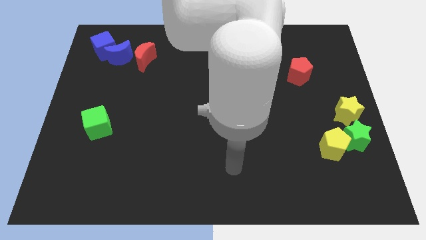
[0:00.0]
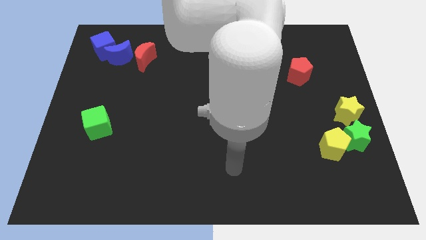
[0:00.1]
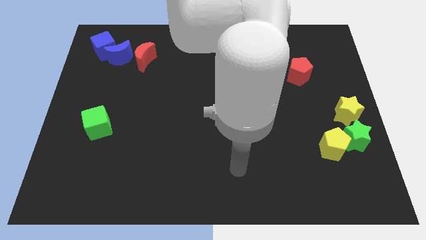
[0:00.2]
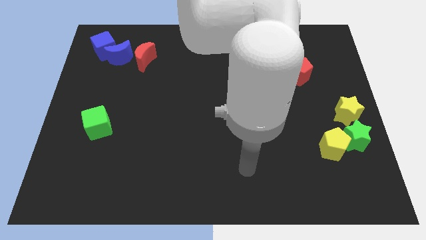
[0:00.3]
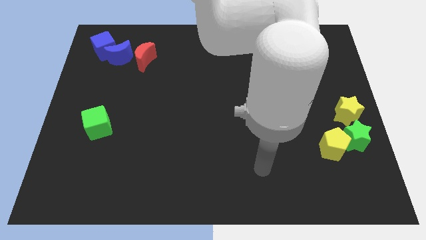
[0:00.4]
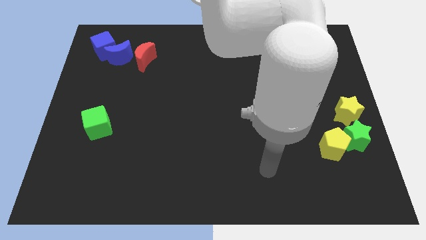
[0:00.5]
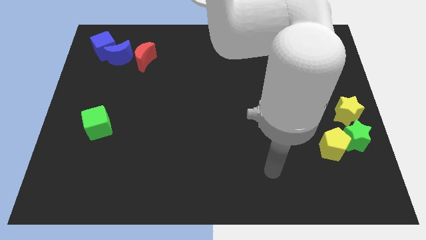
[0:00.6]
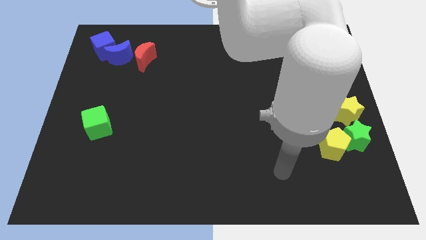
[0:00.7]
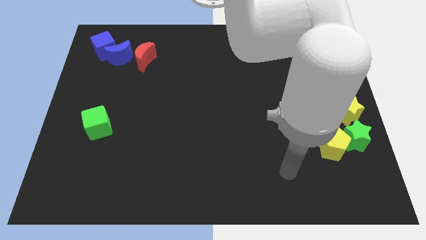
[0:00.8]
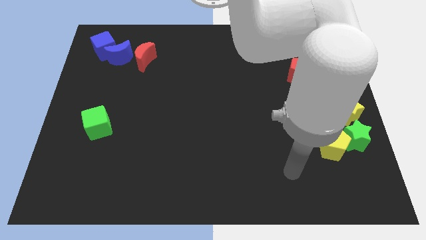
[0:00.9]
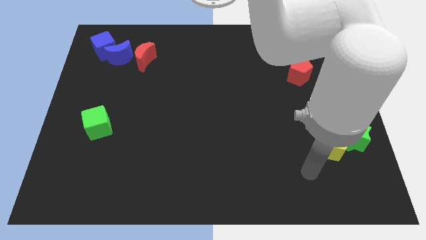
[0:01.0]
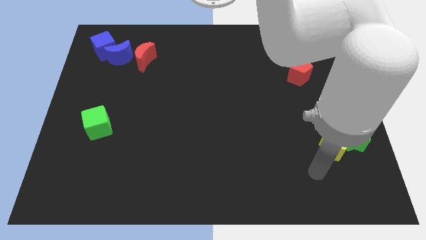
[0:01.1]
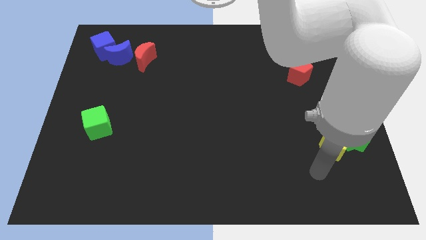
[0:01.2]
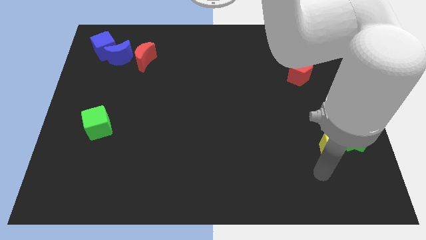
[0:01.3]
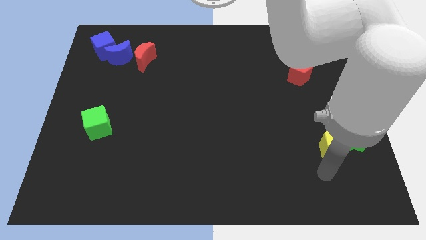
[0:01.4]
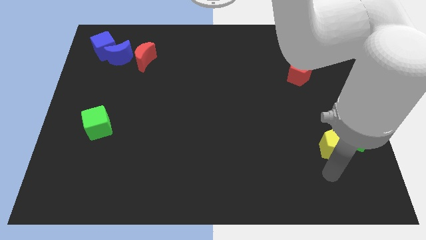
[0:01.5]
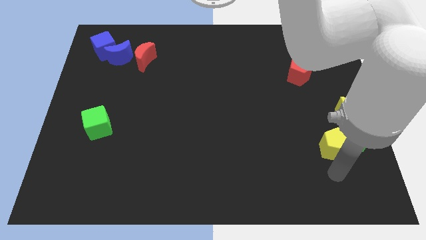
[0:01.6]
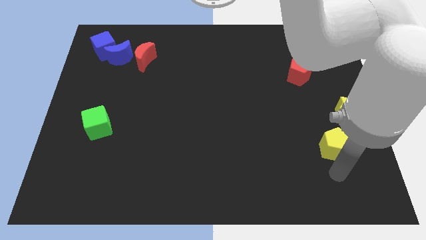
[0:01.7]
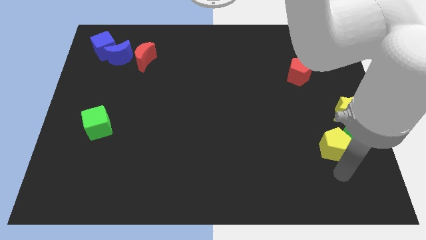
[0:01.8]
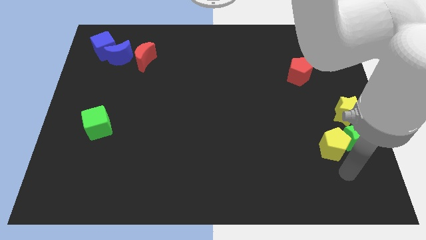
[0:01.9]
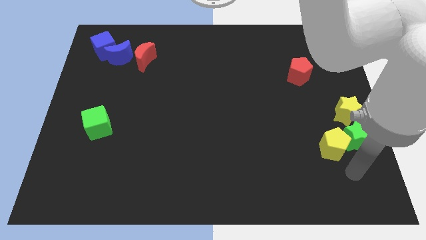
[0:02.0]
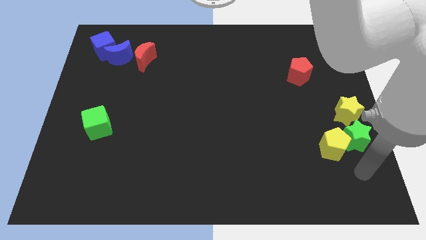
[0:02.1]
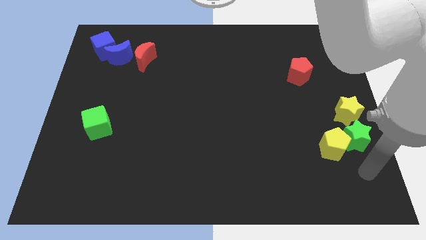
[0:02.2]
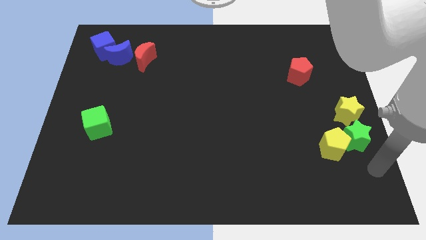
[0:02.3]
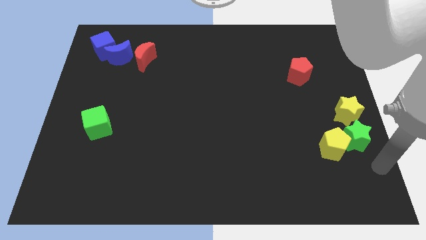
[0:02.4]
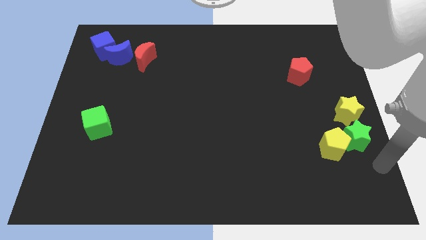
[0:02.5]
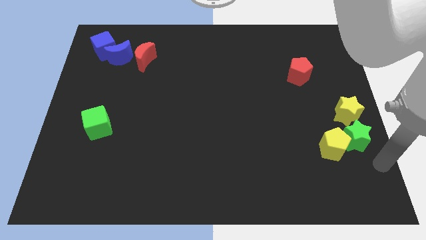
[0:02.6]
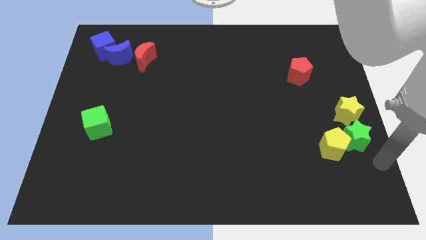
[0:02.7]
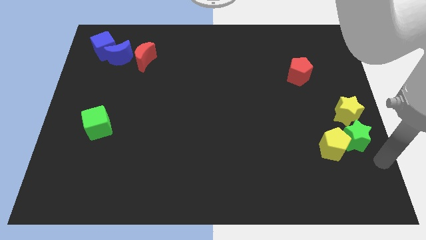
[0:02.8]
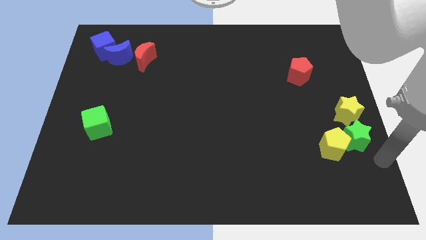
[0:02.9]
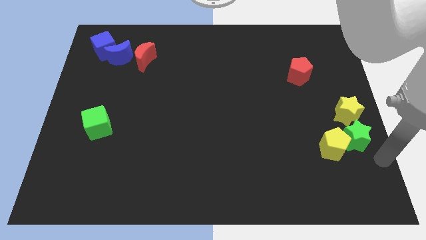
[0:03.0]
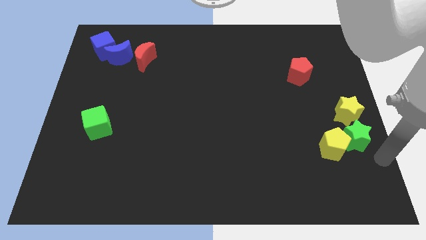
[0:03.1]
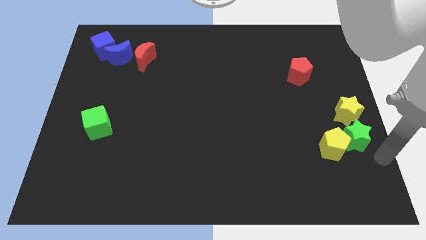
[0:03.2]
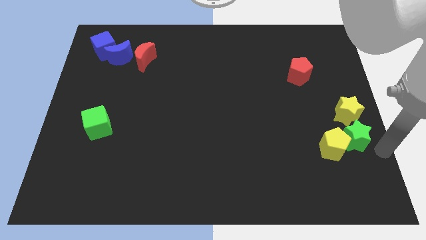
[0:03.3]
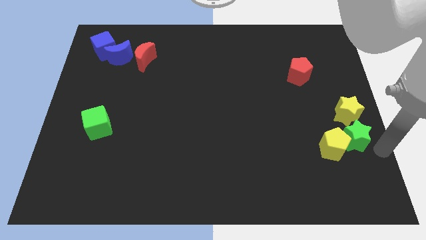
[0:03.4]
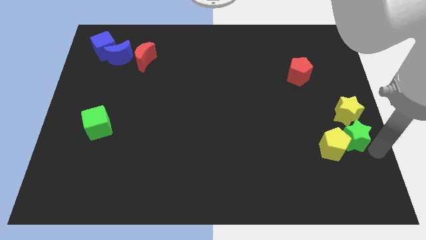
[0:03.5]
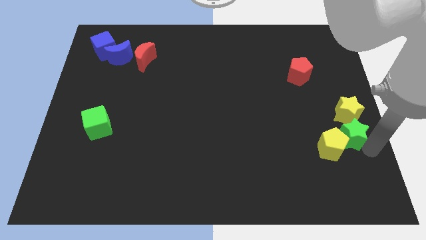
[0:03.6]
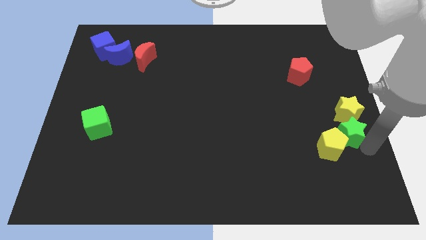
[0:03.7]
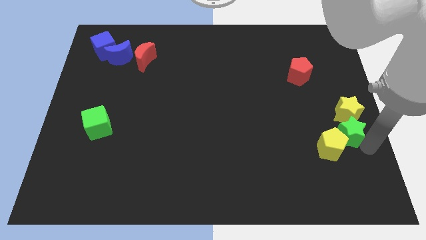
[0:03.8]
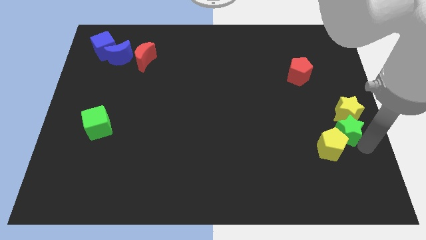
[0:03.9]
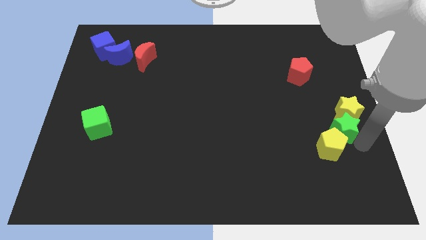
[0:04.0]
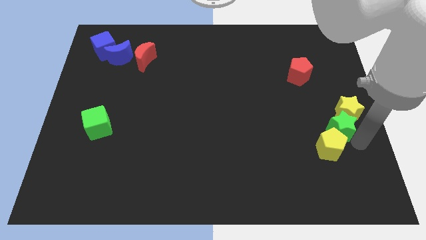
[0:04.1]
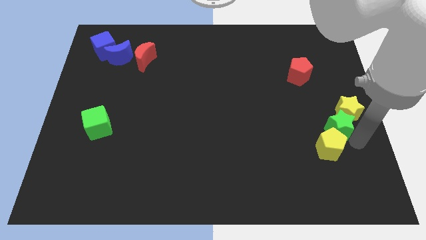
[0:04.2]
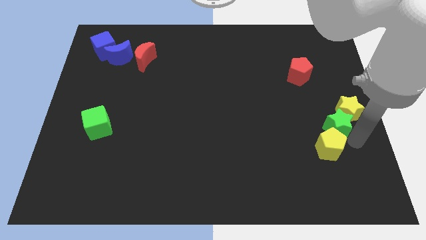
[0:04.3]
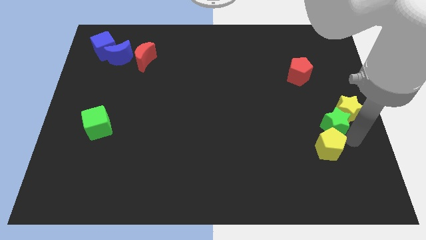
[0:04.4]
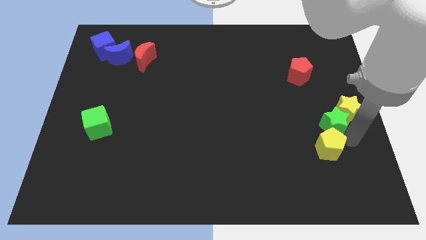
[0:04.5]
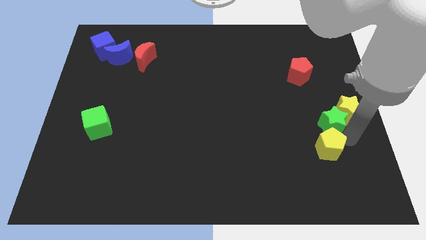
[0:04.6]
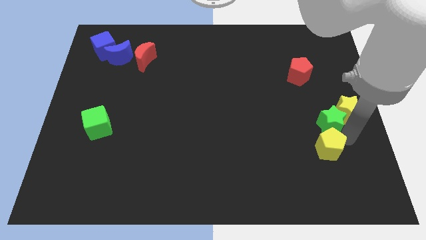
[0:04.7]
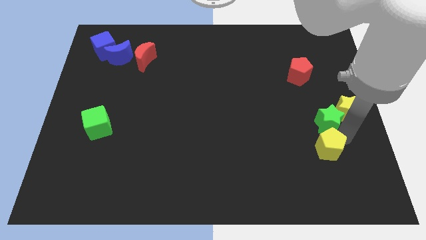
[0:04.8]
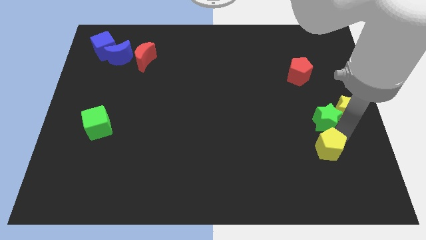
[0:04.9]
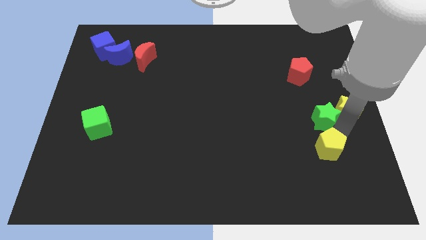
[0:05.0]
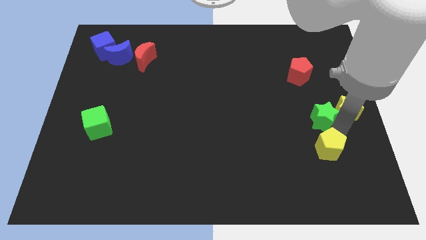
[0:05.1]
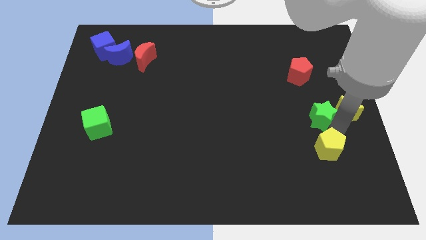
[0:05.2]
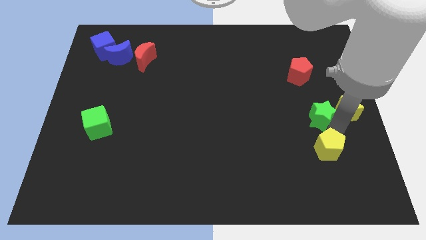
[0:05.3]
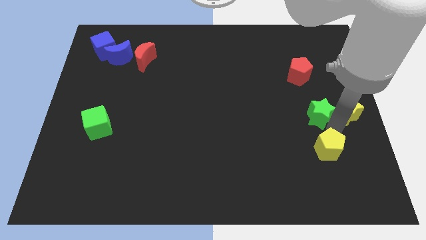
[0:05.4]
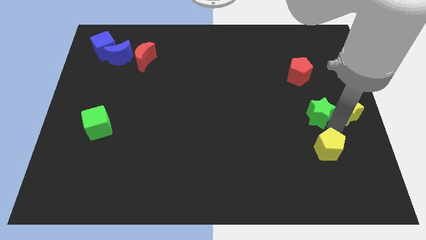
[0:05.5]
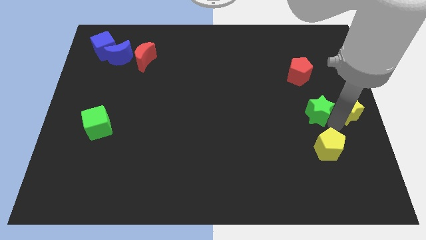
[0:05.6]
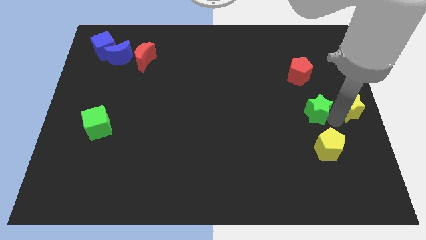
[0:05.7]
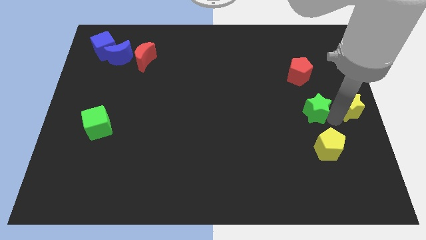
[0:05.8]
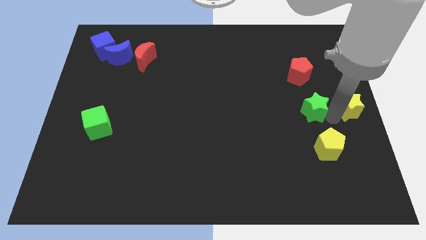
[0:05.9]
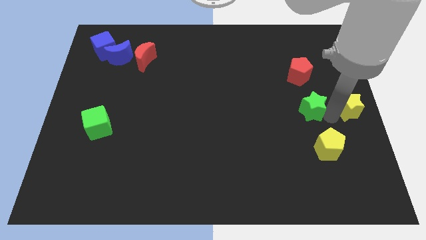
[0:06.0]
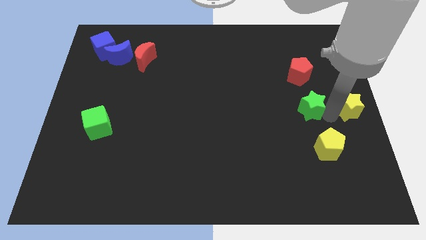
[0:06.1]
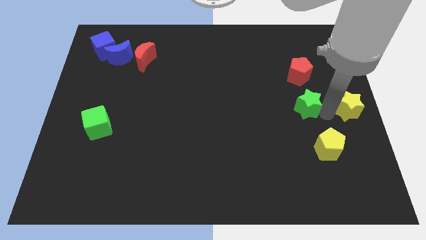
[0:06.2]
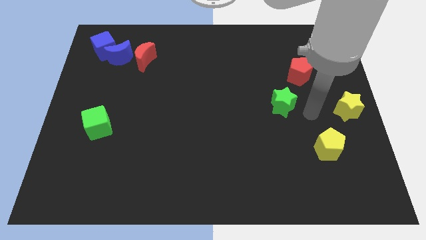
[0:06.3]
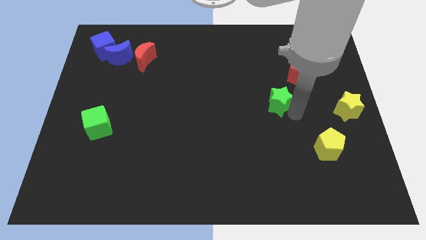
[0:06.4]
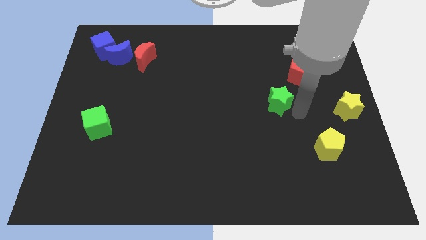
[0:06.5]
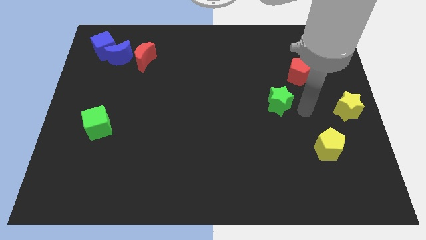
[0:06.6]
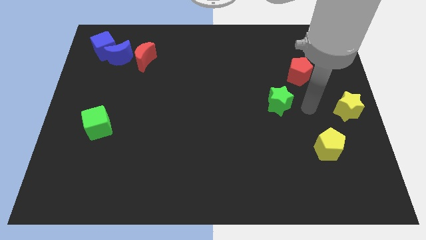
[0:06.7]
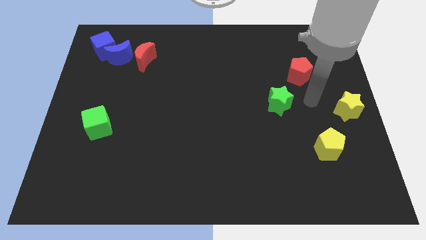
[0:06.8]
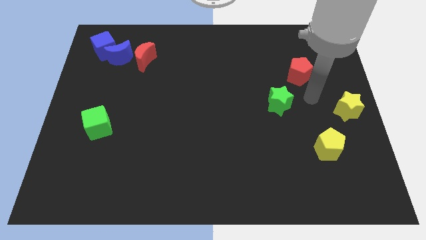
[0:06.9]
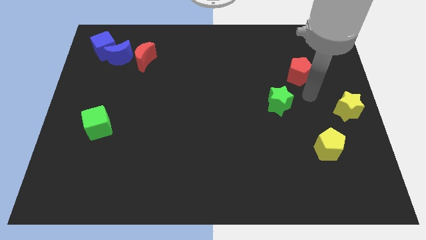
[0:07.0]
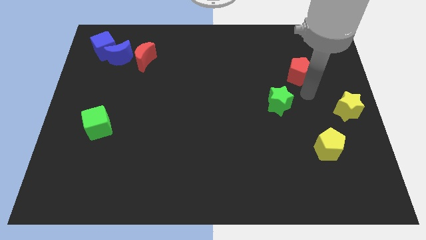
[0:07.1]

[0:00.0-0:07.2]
place the green star below the red pentagon

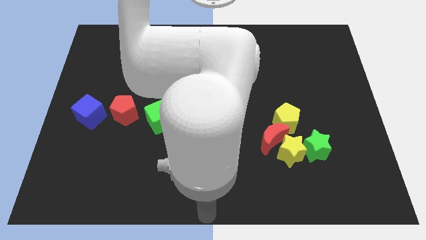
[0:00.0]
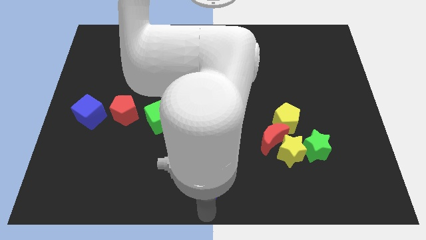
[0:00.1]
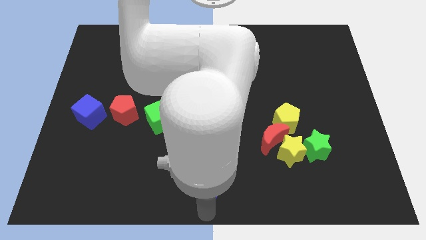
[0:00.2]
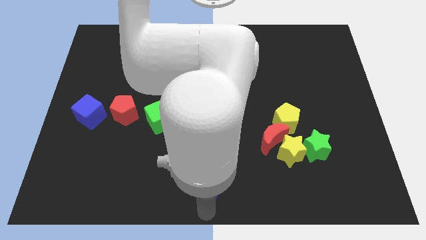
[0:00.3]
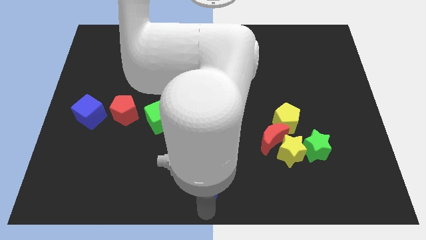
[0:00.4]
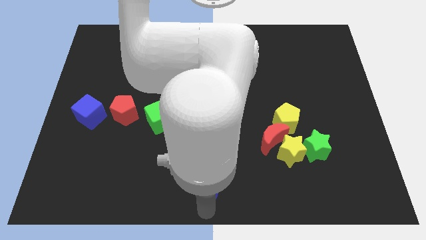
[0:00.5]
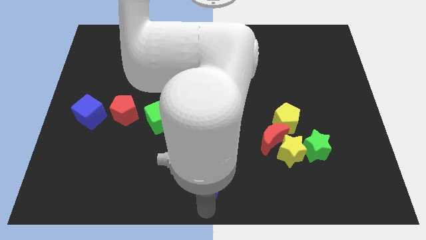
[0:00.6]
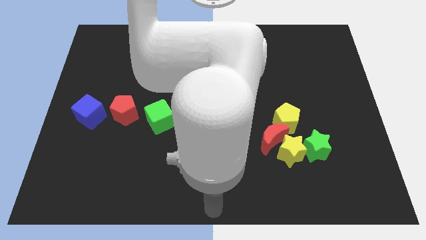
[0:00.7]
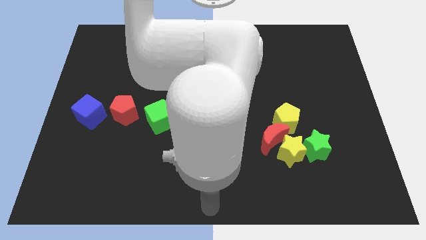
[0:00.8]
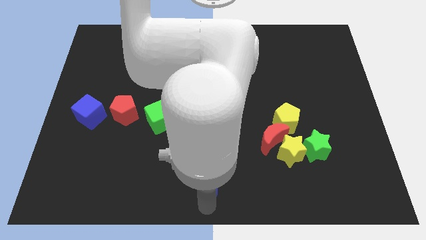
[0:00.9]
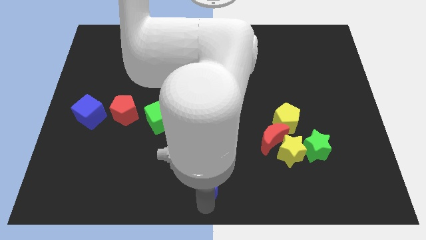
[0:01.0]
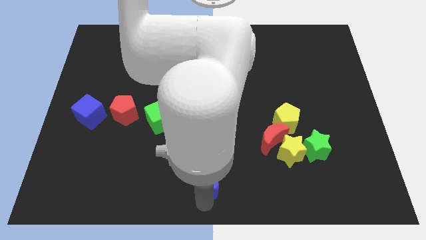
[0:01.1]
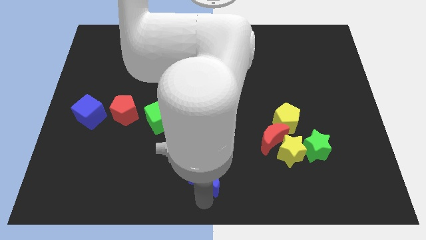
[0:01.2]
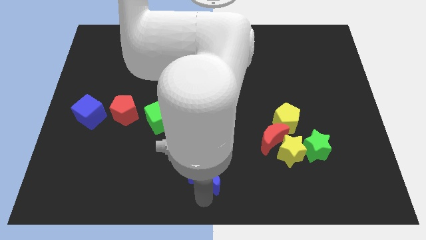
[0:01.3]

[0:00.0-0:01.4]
move your arm towards the blue crescent

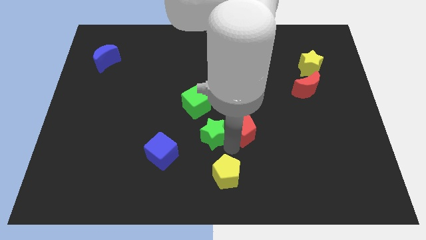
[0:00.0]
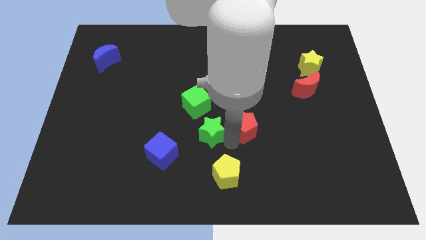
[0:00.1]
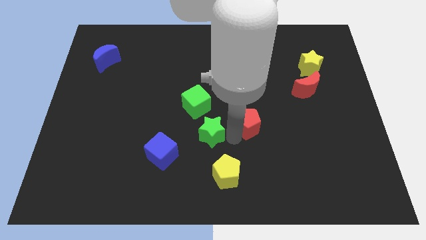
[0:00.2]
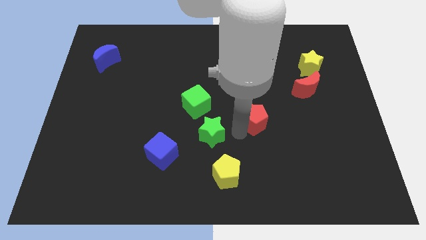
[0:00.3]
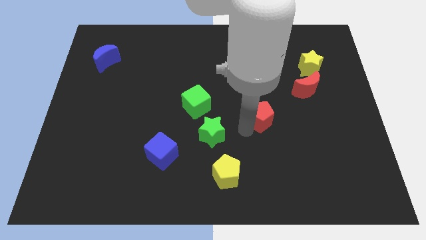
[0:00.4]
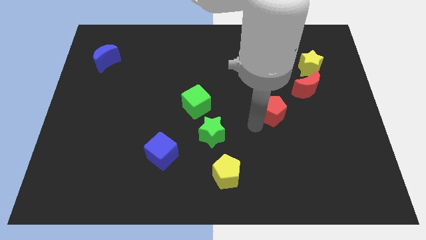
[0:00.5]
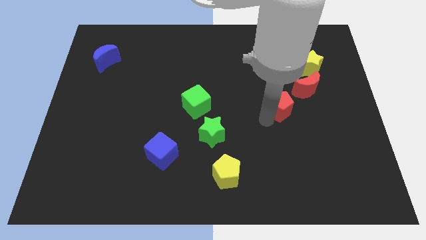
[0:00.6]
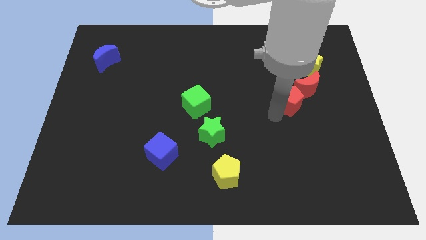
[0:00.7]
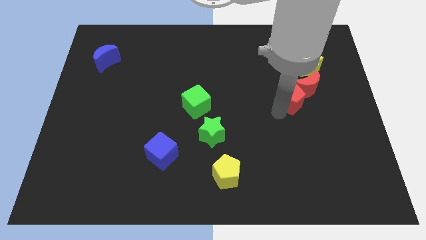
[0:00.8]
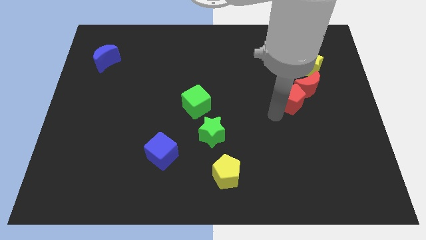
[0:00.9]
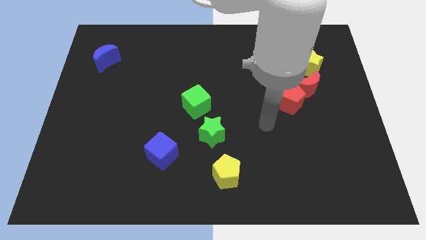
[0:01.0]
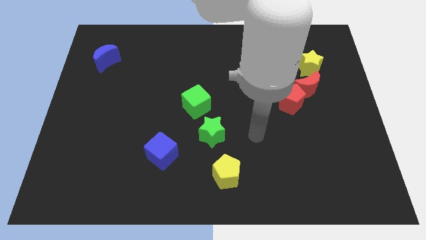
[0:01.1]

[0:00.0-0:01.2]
separate the red pentagon from the green star
